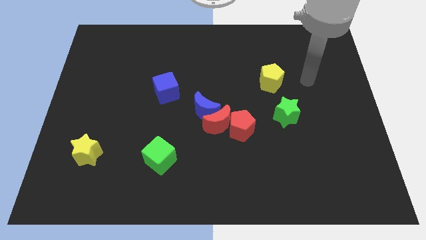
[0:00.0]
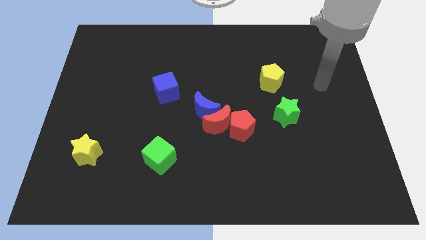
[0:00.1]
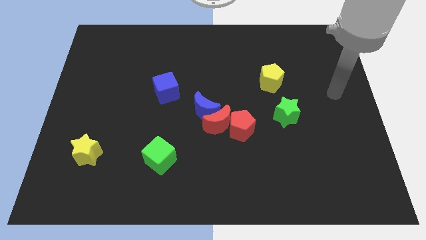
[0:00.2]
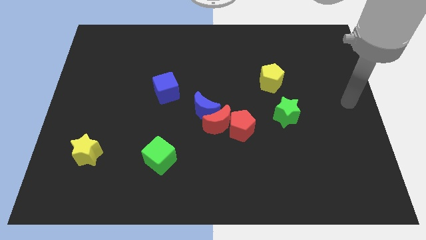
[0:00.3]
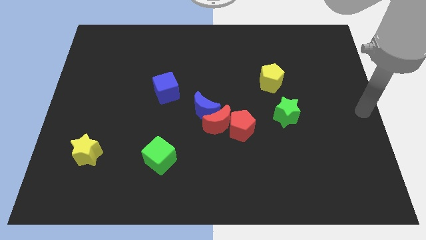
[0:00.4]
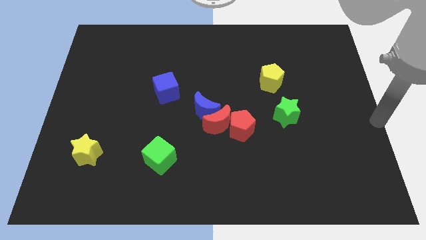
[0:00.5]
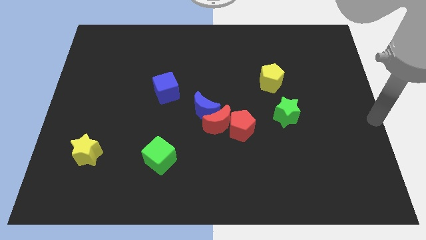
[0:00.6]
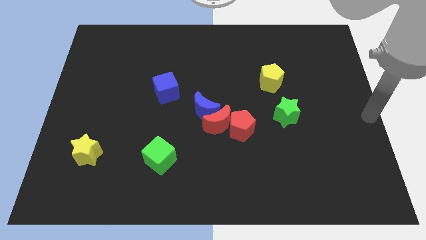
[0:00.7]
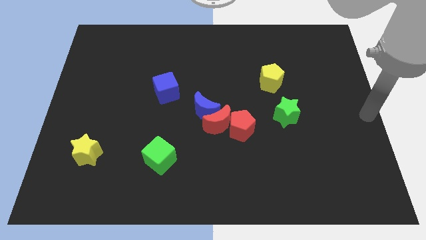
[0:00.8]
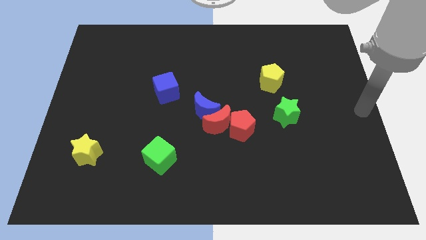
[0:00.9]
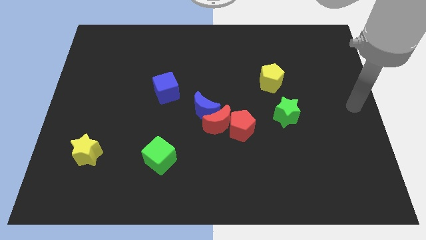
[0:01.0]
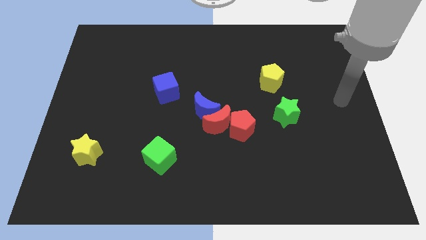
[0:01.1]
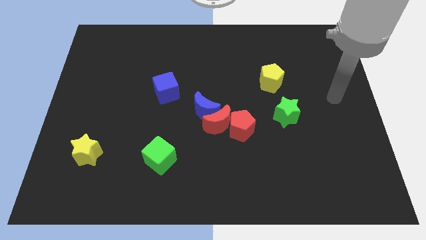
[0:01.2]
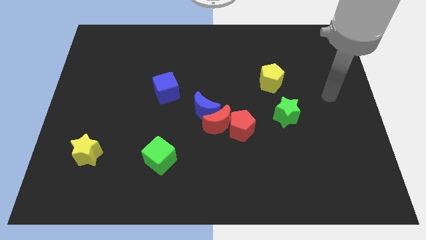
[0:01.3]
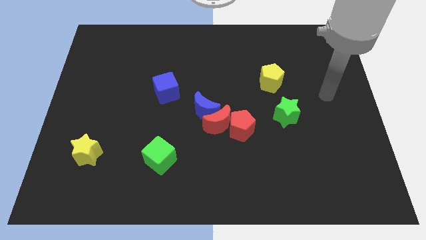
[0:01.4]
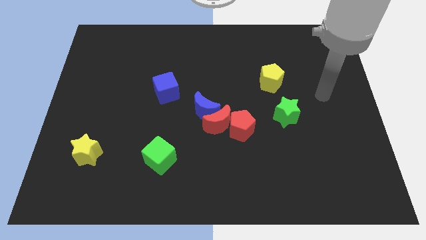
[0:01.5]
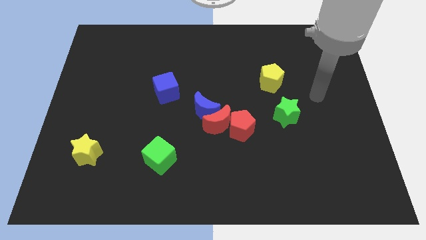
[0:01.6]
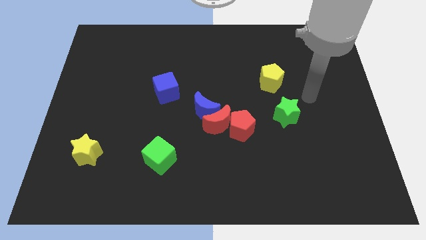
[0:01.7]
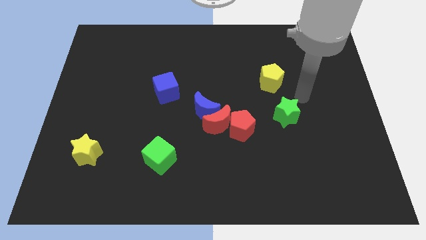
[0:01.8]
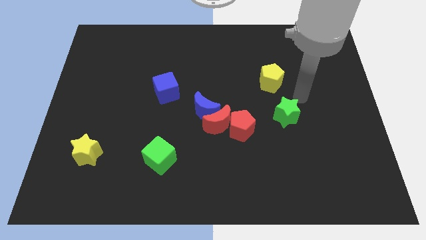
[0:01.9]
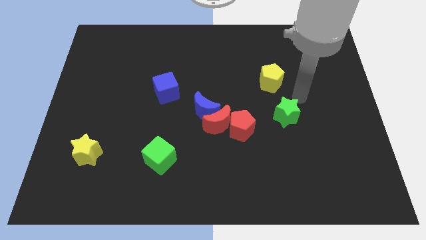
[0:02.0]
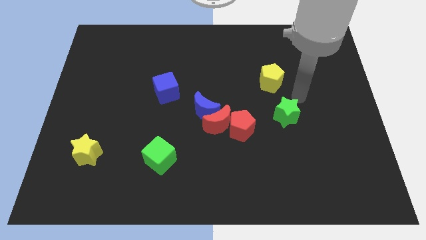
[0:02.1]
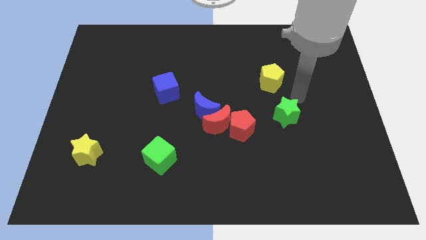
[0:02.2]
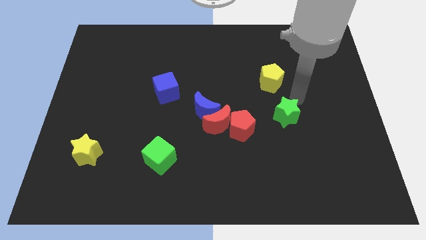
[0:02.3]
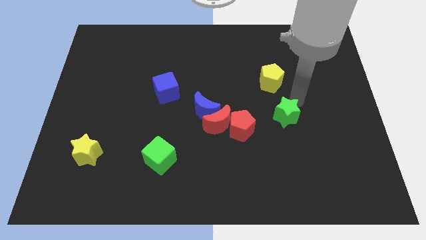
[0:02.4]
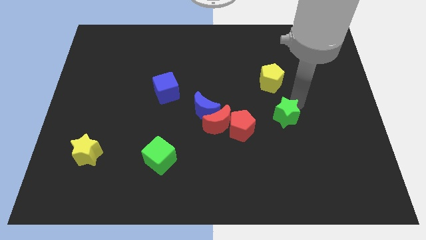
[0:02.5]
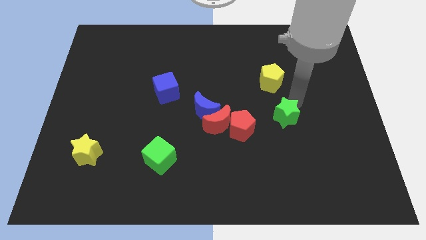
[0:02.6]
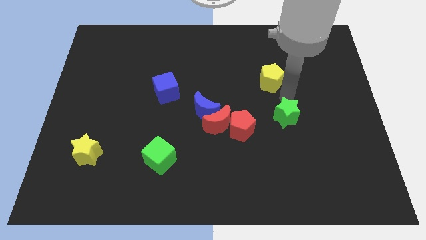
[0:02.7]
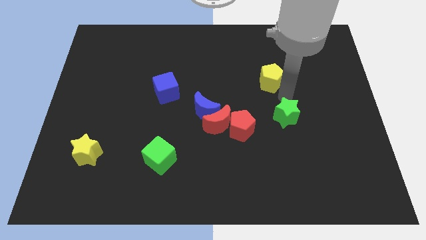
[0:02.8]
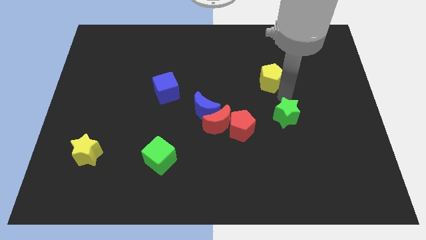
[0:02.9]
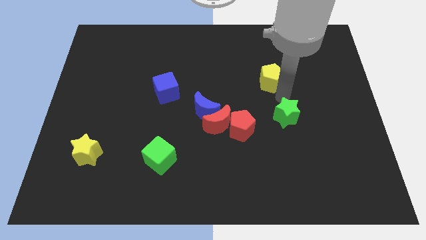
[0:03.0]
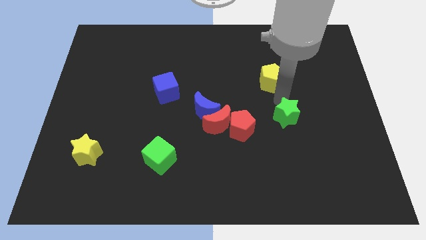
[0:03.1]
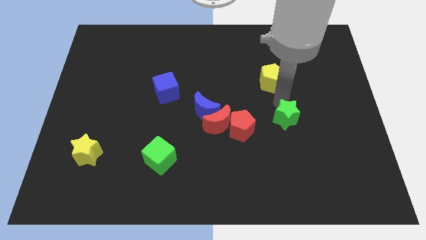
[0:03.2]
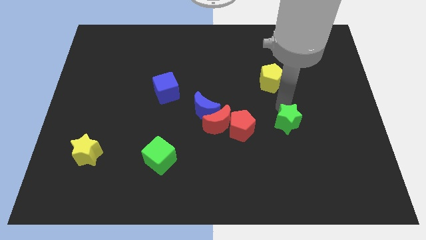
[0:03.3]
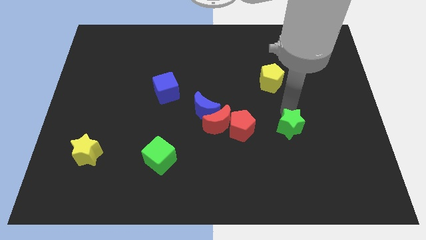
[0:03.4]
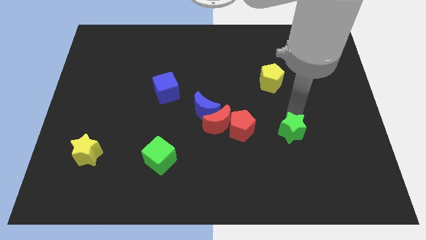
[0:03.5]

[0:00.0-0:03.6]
push the green star slightly down

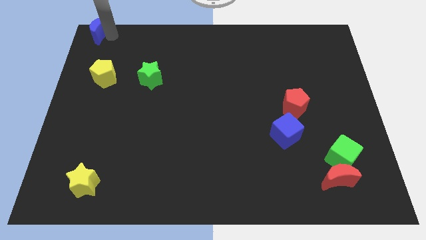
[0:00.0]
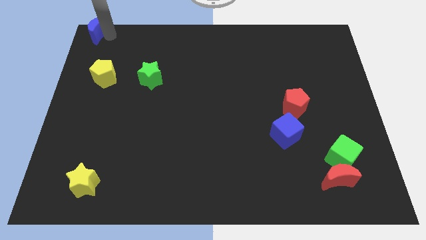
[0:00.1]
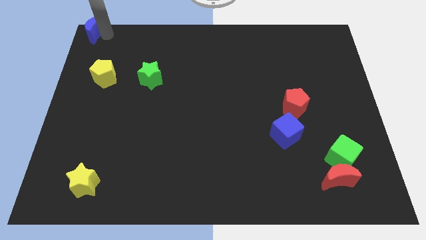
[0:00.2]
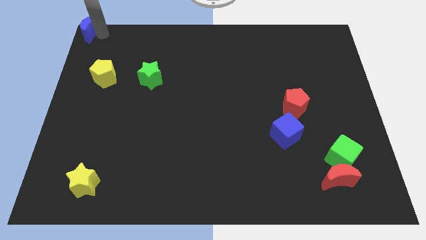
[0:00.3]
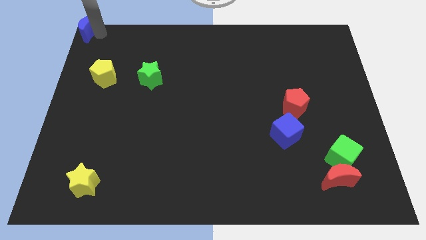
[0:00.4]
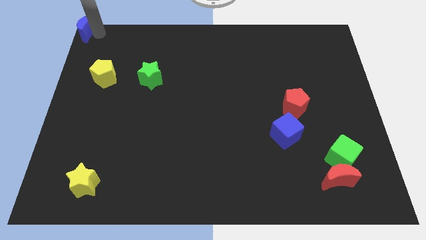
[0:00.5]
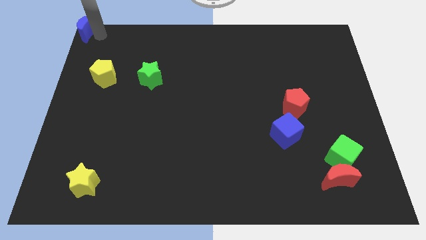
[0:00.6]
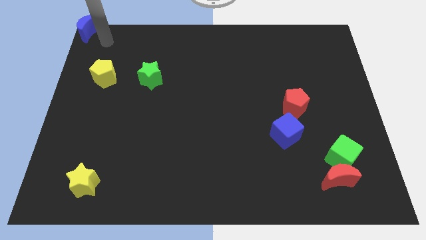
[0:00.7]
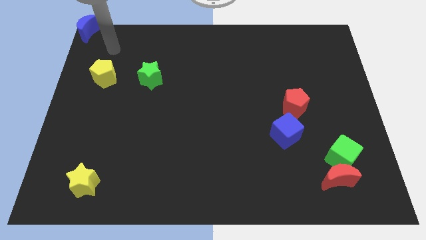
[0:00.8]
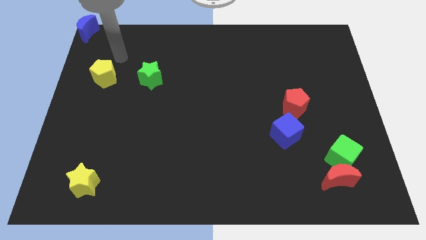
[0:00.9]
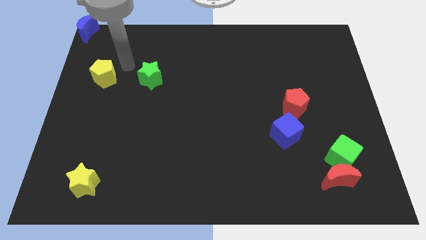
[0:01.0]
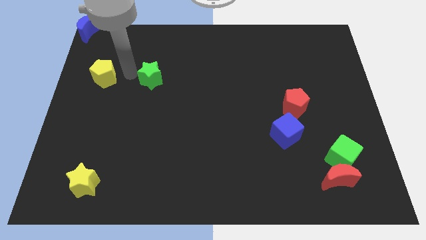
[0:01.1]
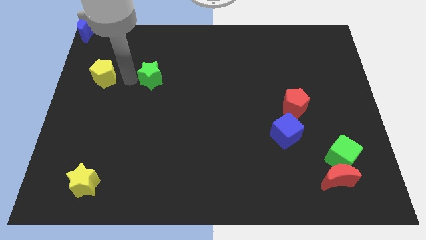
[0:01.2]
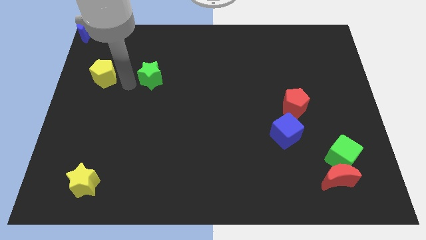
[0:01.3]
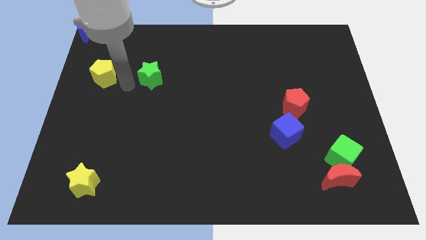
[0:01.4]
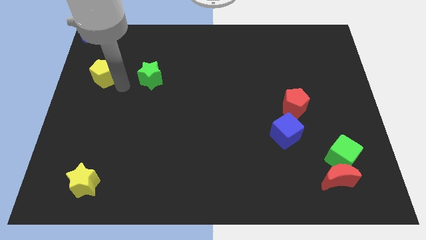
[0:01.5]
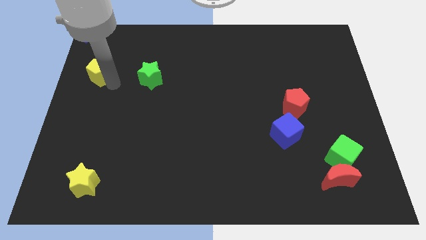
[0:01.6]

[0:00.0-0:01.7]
place the blue crescent towards the top left corner of the board

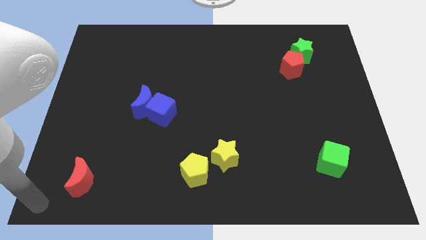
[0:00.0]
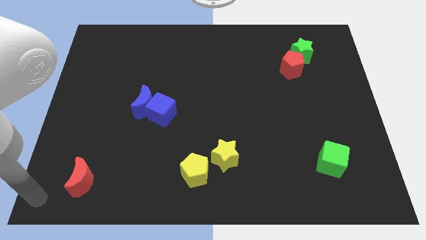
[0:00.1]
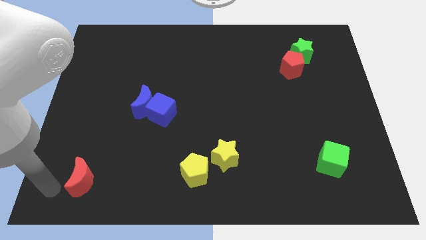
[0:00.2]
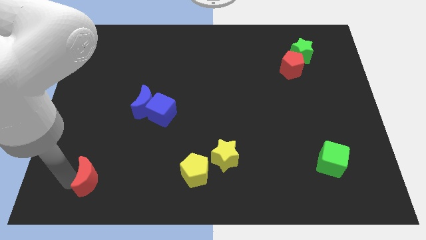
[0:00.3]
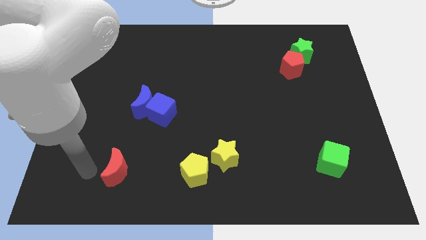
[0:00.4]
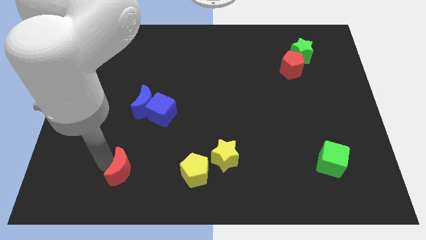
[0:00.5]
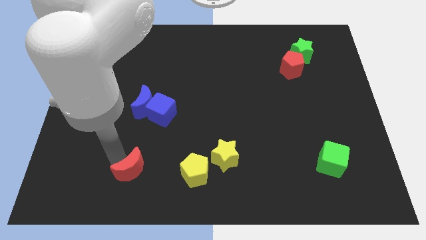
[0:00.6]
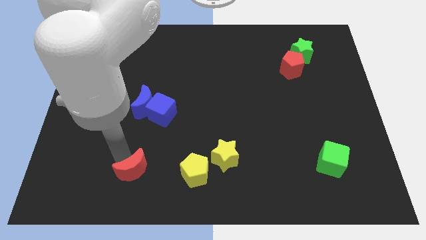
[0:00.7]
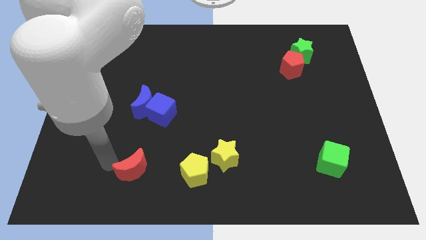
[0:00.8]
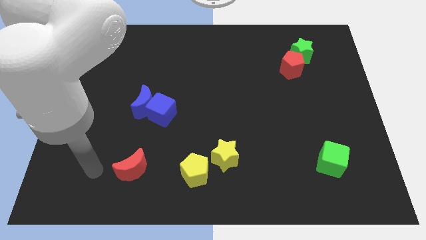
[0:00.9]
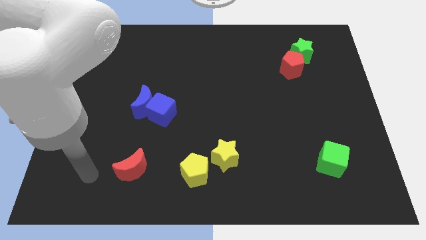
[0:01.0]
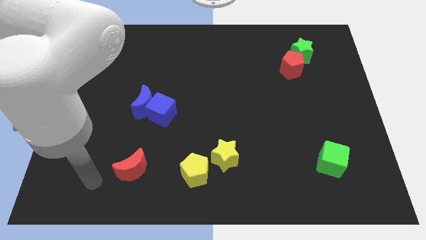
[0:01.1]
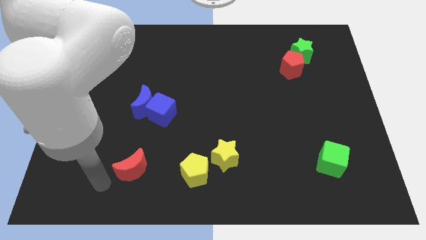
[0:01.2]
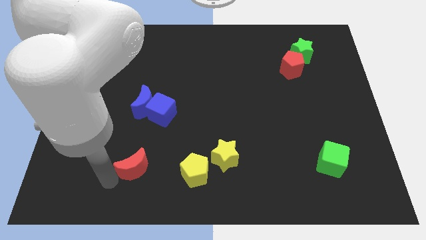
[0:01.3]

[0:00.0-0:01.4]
move the red moon horizontally to the left side of the yellow pentagon

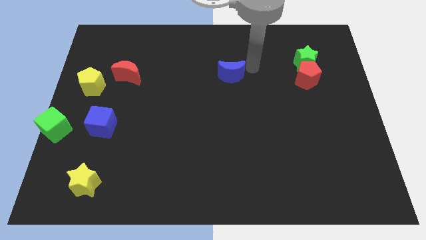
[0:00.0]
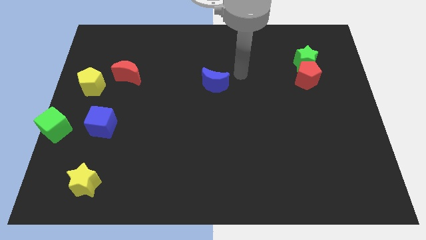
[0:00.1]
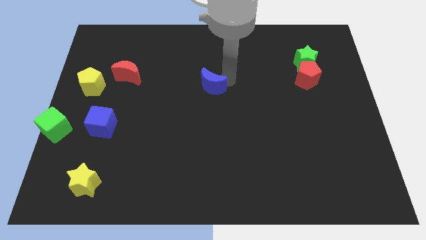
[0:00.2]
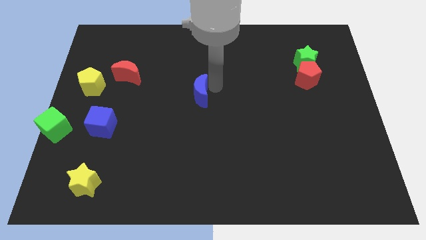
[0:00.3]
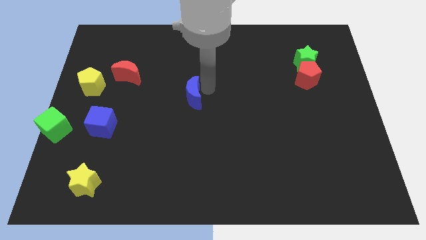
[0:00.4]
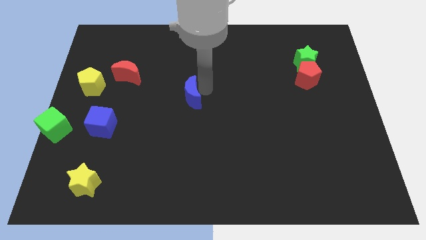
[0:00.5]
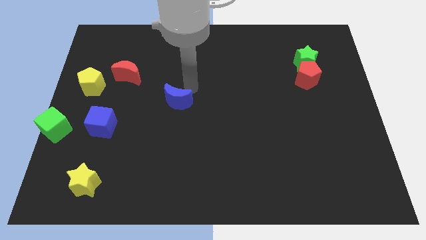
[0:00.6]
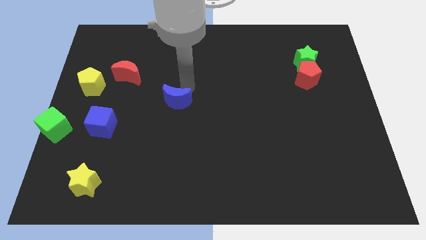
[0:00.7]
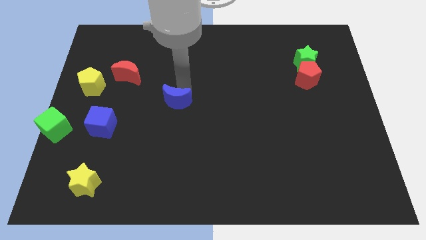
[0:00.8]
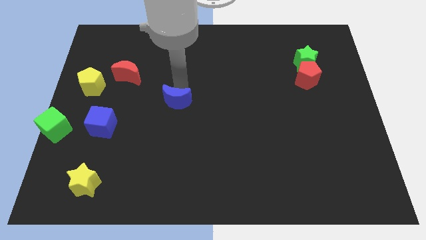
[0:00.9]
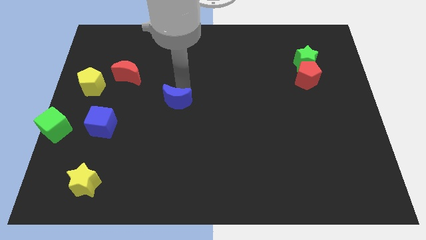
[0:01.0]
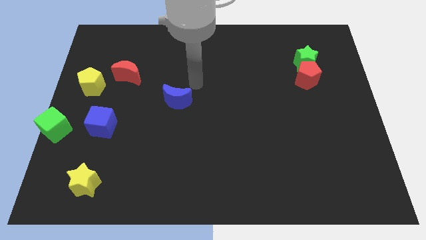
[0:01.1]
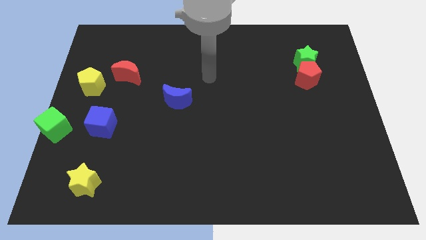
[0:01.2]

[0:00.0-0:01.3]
push the blue moon to the bottom side of the red crescent

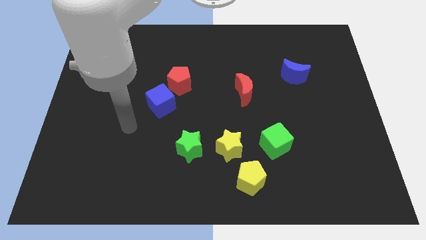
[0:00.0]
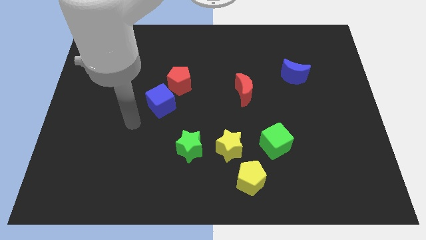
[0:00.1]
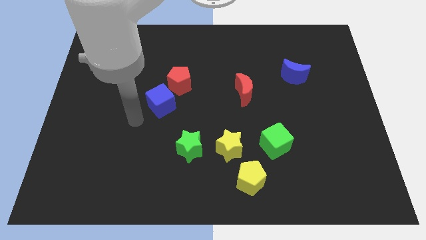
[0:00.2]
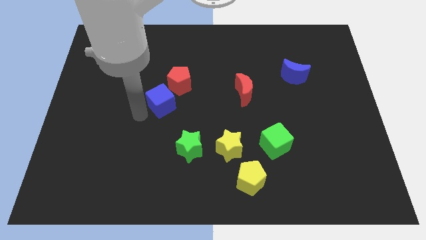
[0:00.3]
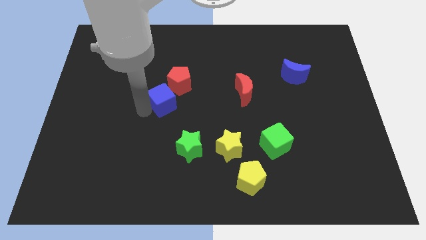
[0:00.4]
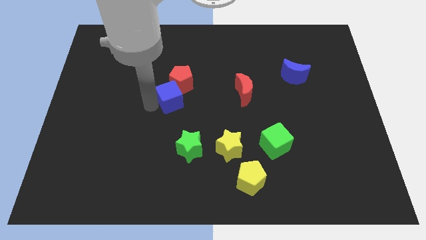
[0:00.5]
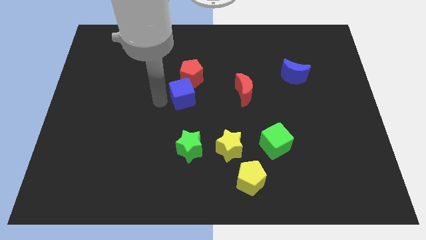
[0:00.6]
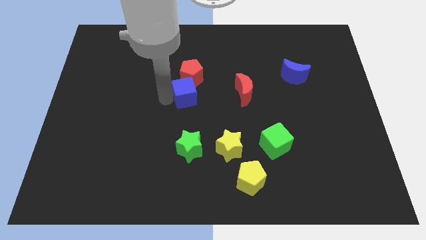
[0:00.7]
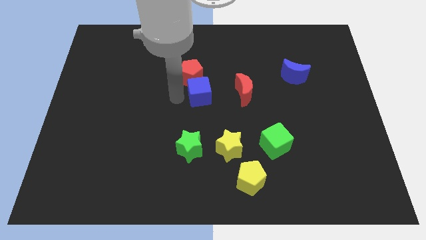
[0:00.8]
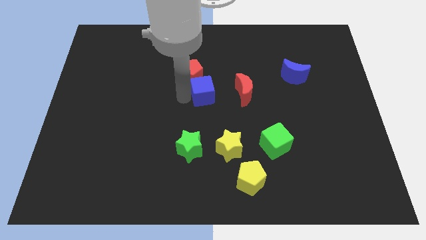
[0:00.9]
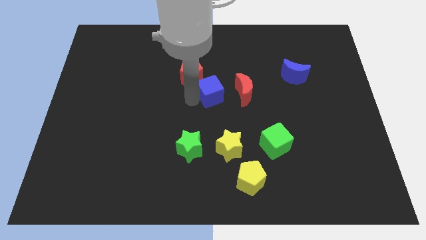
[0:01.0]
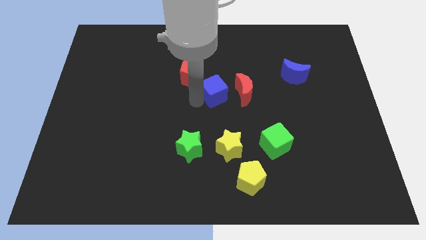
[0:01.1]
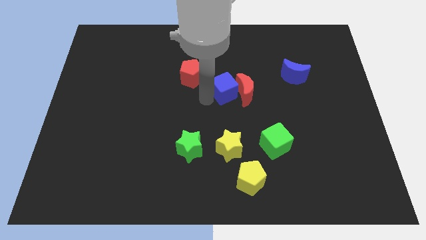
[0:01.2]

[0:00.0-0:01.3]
place blue cube at center
